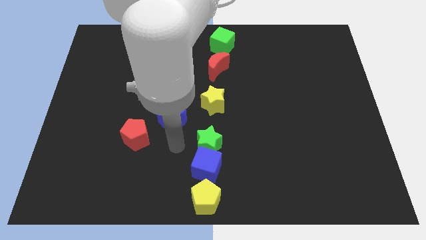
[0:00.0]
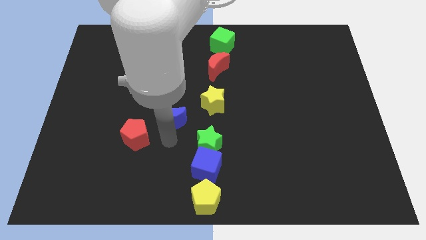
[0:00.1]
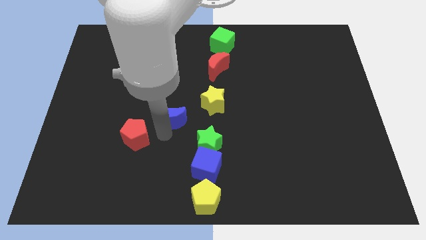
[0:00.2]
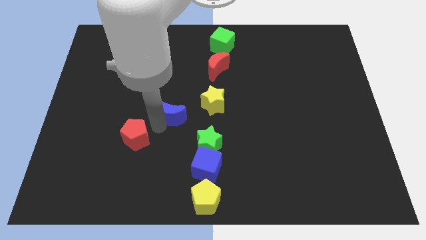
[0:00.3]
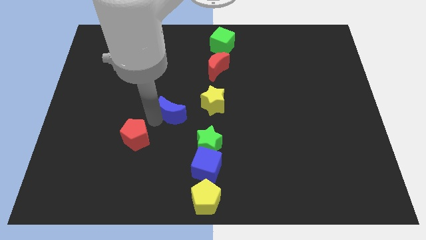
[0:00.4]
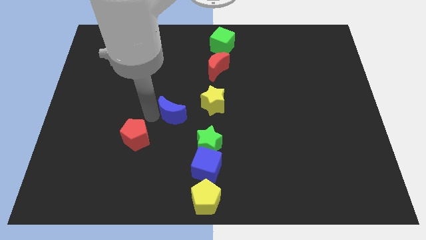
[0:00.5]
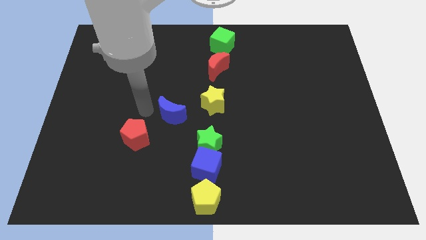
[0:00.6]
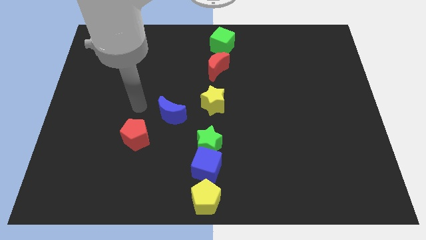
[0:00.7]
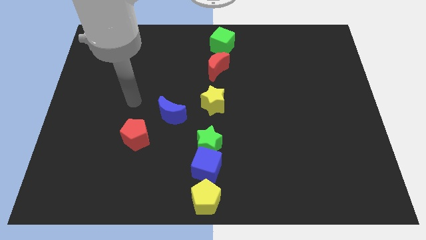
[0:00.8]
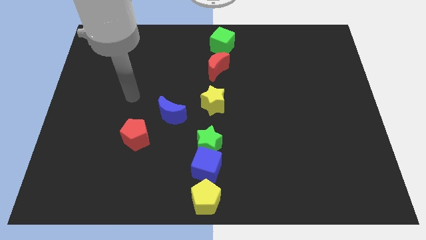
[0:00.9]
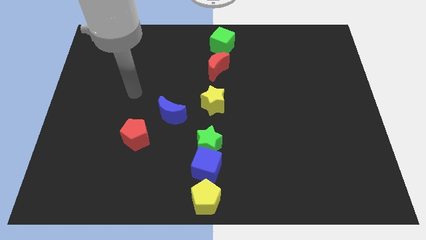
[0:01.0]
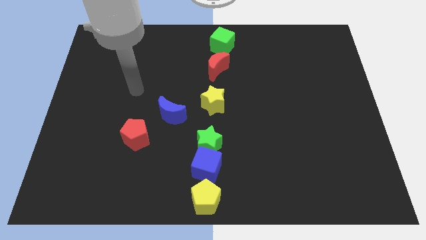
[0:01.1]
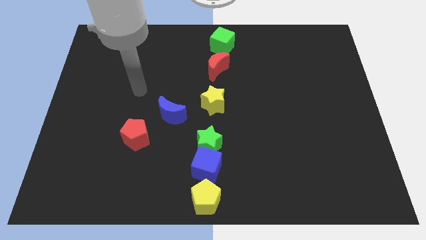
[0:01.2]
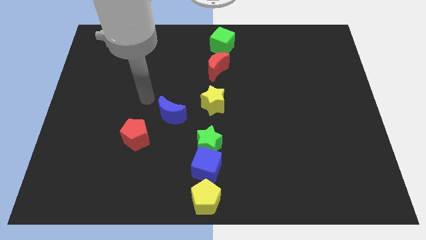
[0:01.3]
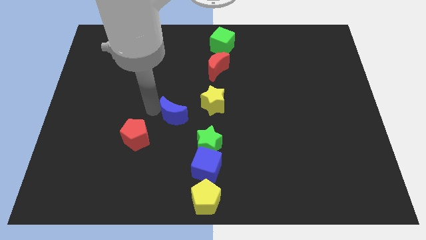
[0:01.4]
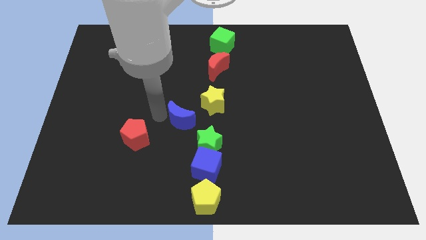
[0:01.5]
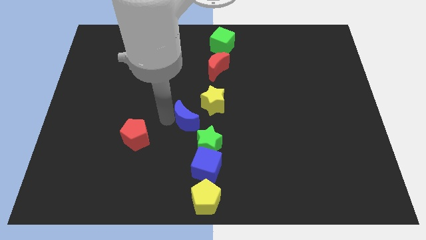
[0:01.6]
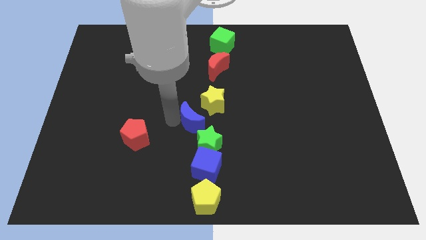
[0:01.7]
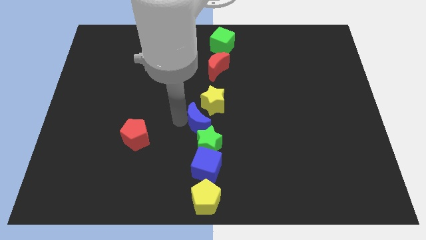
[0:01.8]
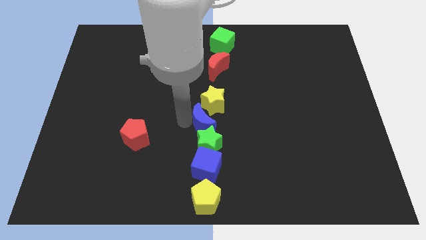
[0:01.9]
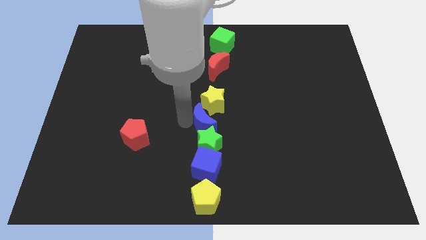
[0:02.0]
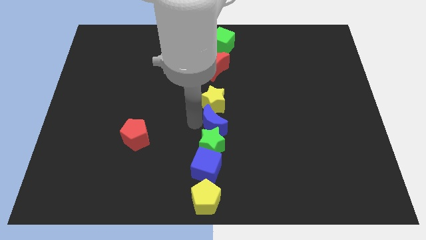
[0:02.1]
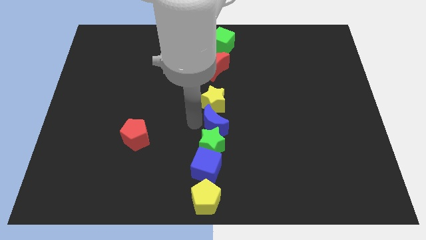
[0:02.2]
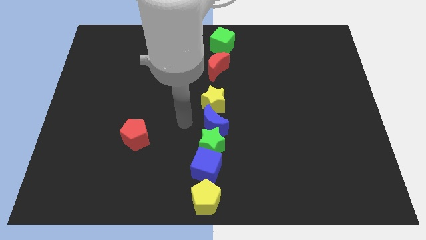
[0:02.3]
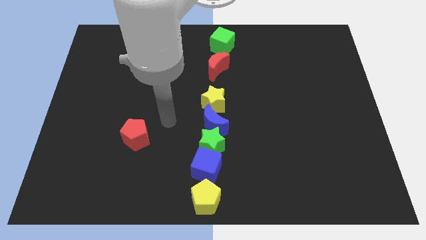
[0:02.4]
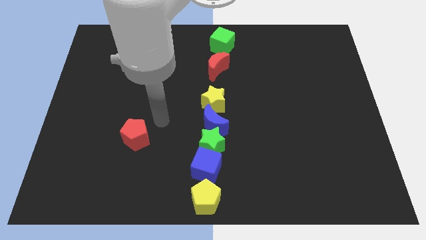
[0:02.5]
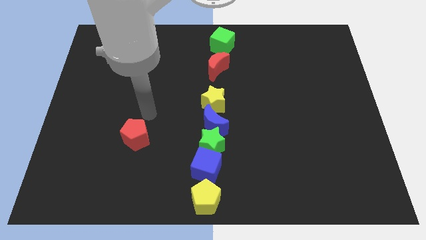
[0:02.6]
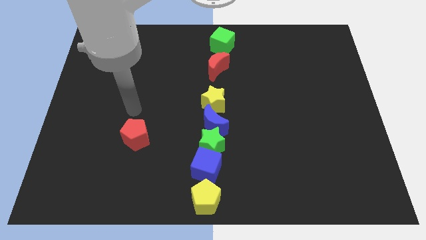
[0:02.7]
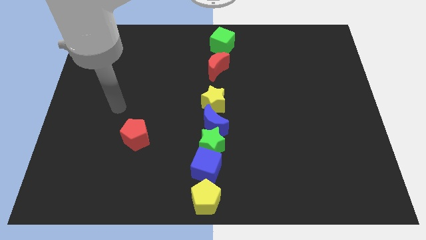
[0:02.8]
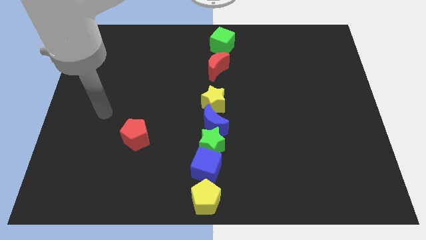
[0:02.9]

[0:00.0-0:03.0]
place blue moon between yellow star and green star

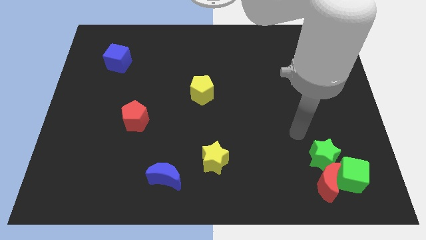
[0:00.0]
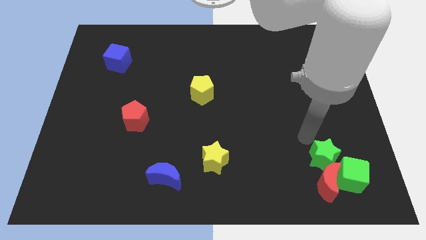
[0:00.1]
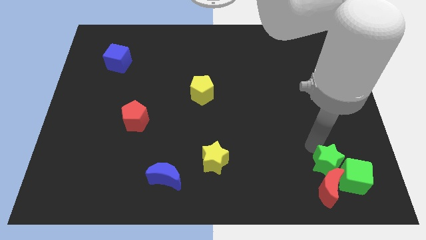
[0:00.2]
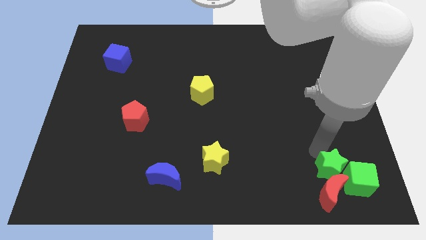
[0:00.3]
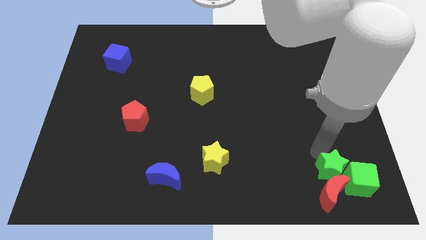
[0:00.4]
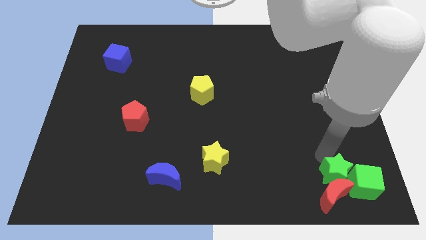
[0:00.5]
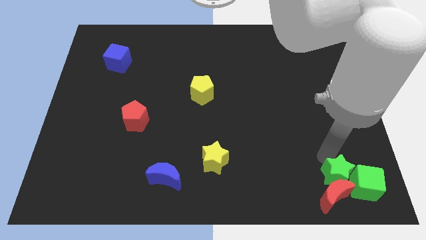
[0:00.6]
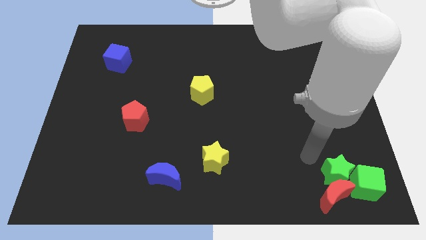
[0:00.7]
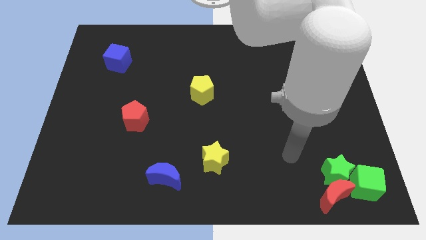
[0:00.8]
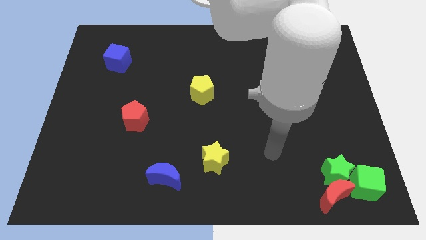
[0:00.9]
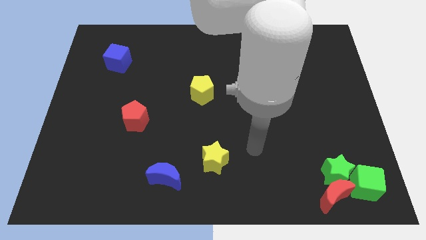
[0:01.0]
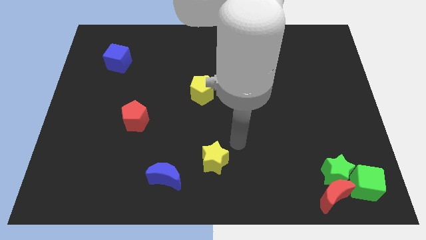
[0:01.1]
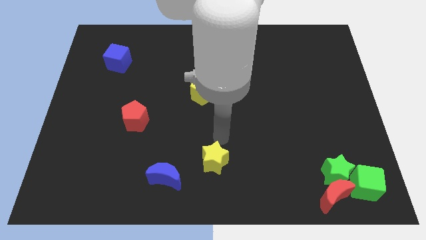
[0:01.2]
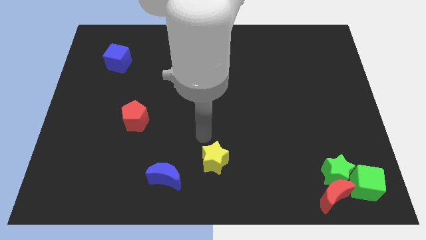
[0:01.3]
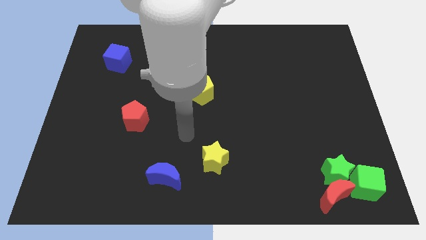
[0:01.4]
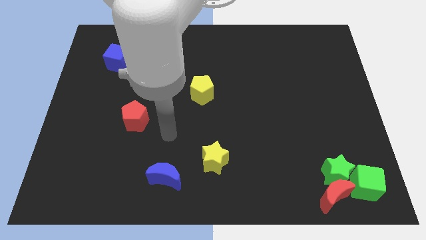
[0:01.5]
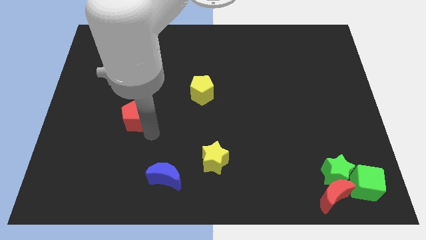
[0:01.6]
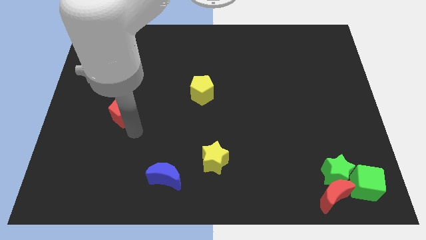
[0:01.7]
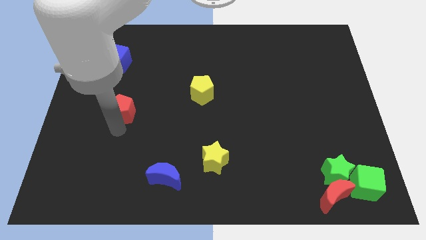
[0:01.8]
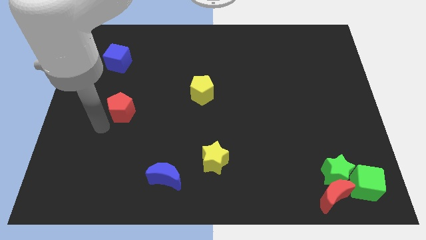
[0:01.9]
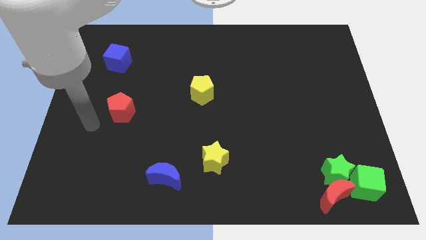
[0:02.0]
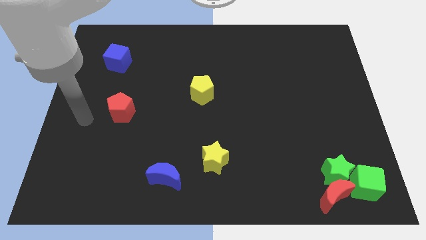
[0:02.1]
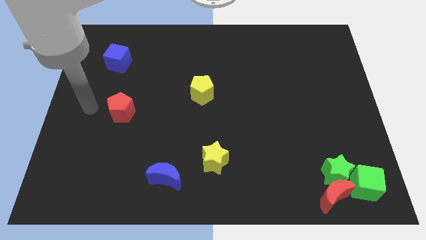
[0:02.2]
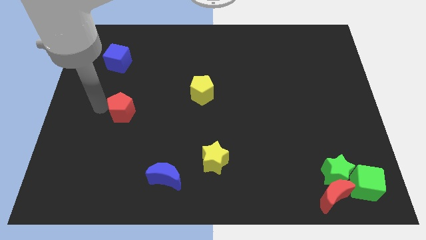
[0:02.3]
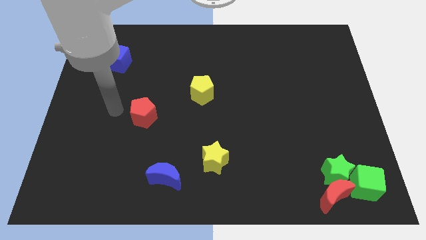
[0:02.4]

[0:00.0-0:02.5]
move your arm to left of red pentagon

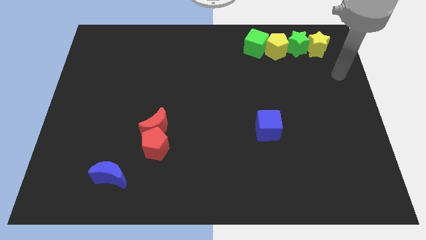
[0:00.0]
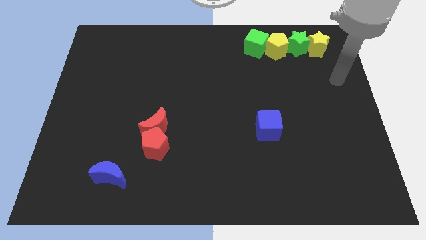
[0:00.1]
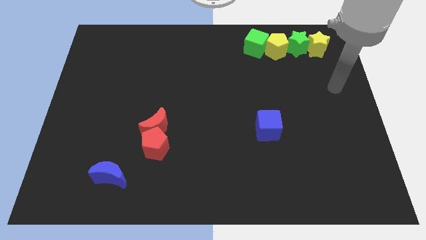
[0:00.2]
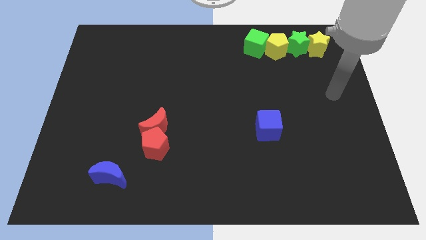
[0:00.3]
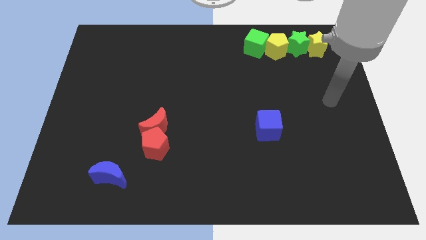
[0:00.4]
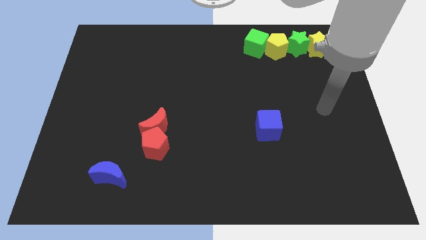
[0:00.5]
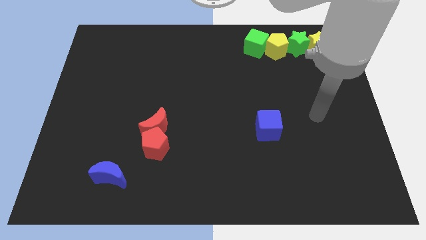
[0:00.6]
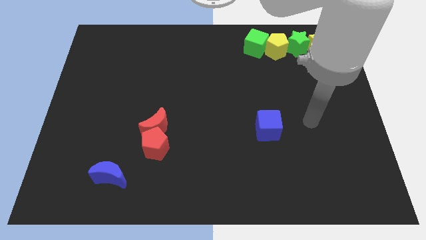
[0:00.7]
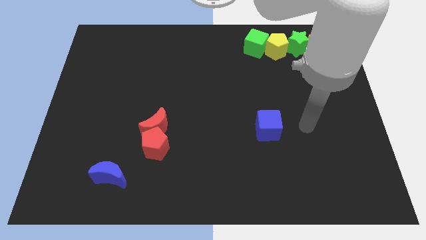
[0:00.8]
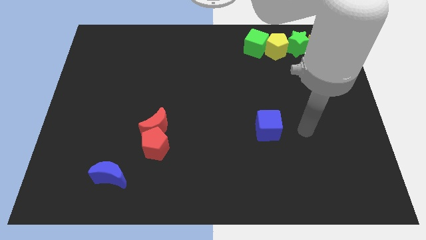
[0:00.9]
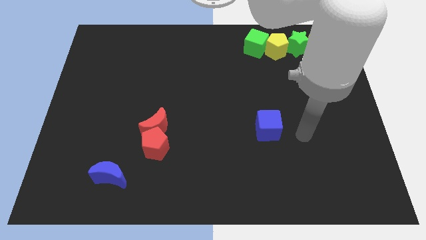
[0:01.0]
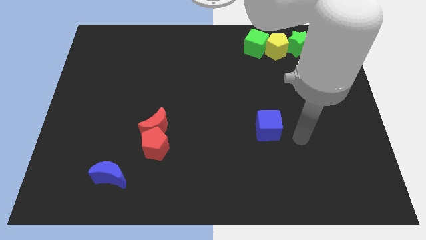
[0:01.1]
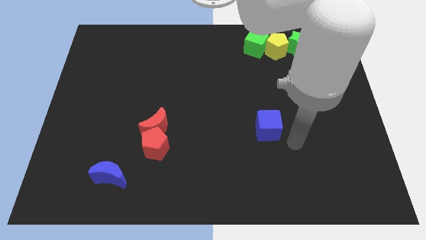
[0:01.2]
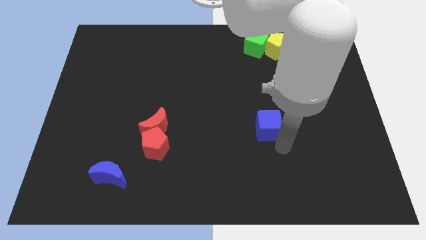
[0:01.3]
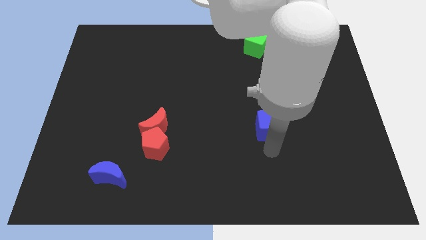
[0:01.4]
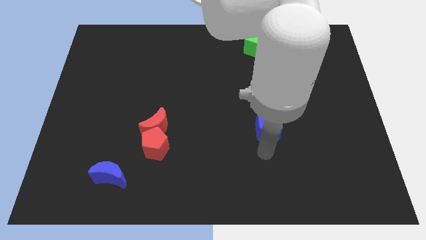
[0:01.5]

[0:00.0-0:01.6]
move your arm to the bottom of blue cube

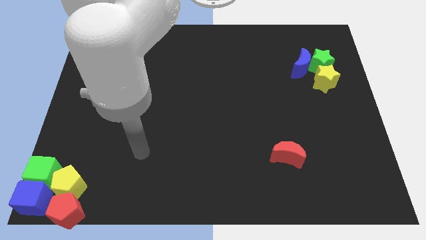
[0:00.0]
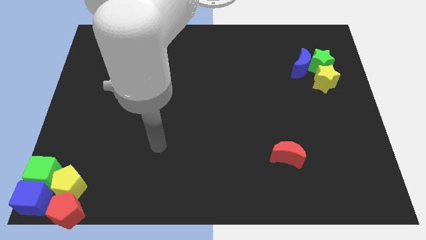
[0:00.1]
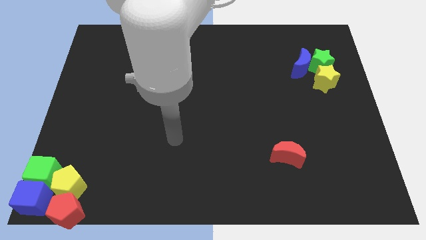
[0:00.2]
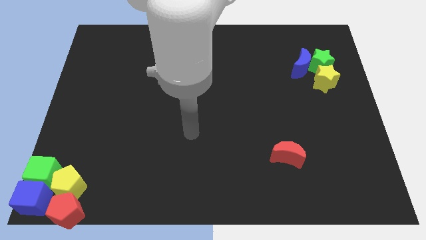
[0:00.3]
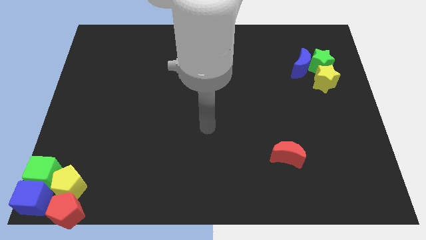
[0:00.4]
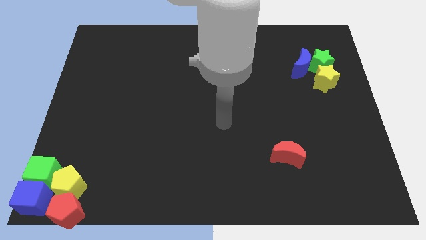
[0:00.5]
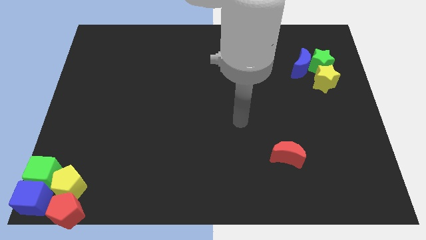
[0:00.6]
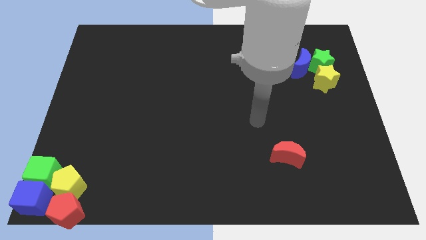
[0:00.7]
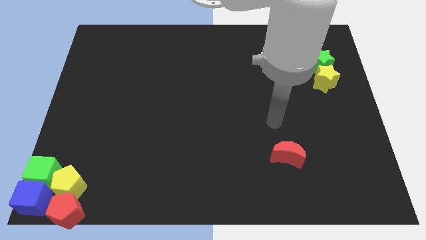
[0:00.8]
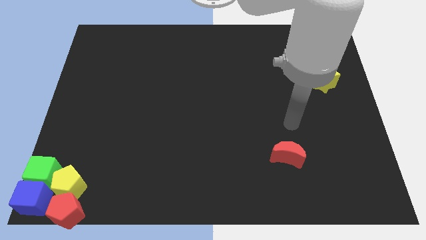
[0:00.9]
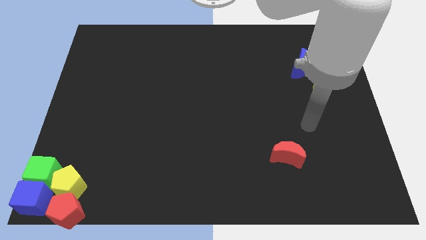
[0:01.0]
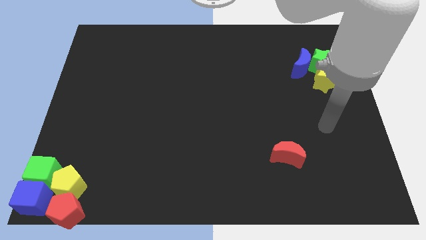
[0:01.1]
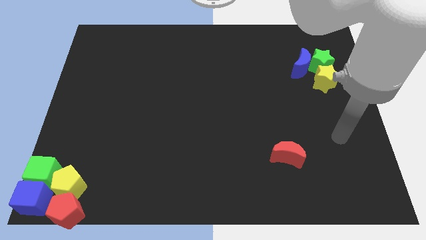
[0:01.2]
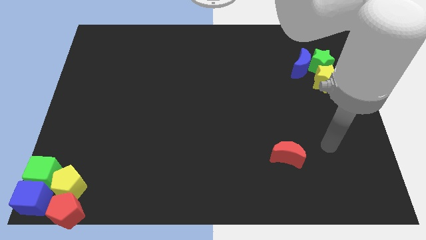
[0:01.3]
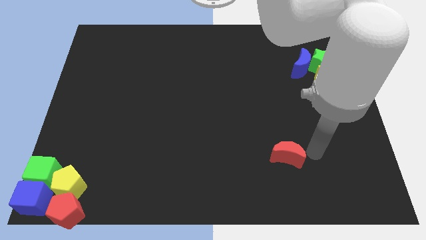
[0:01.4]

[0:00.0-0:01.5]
place your arm to the right of the red moon

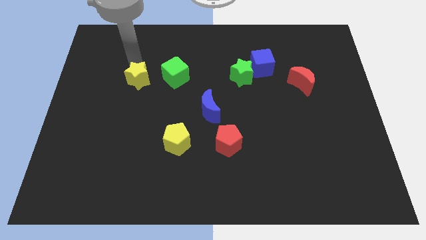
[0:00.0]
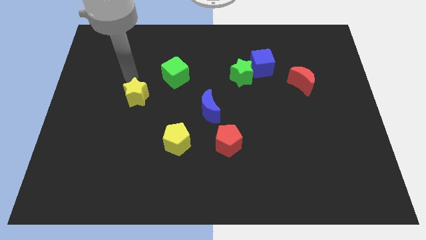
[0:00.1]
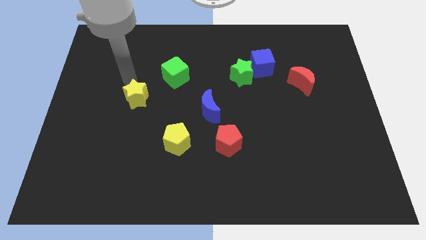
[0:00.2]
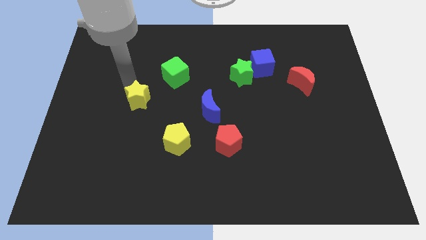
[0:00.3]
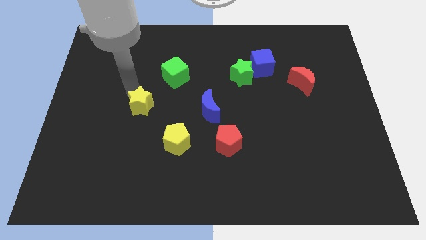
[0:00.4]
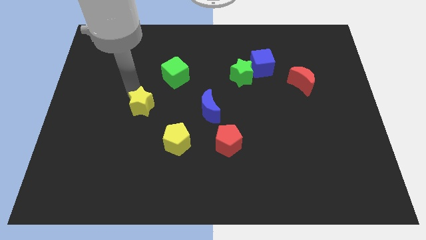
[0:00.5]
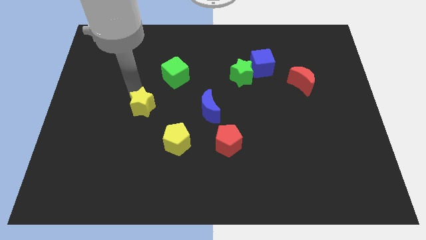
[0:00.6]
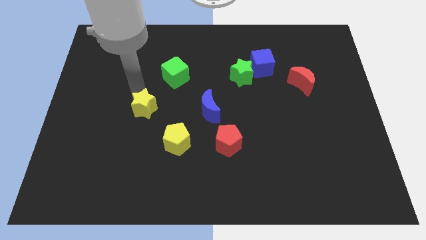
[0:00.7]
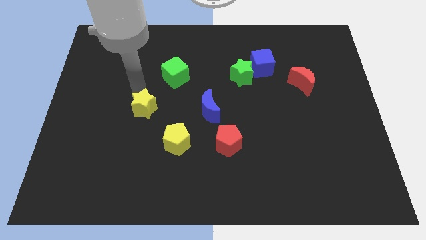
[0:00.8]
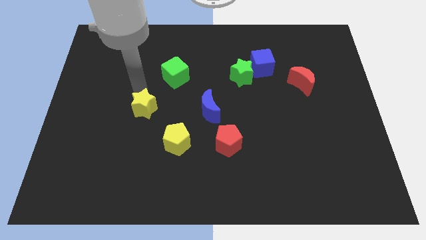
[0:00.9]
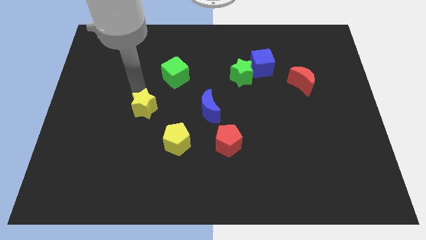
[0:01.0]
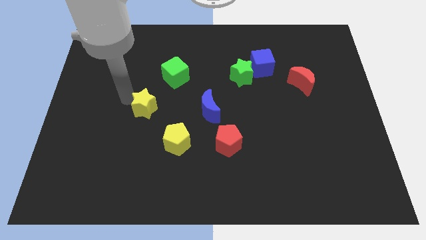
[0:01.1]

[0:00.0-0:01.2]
push yellow star to the left side of the blue crescent
